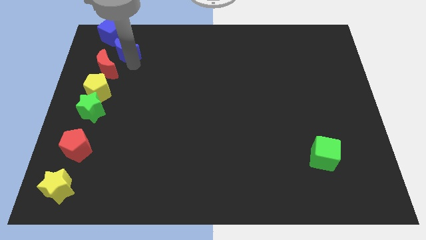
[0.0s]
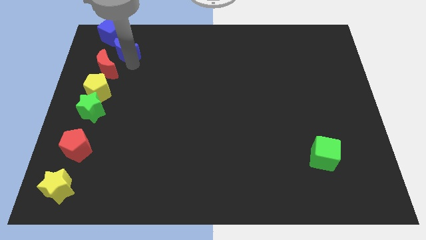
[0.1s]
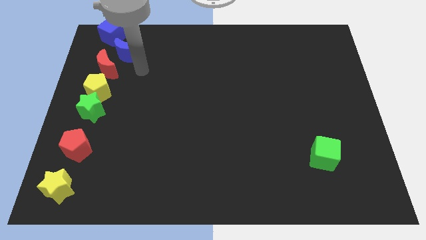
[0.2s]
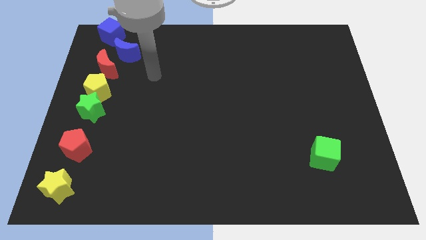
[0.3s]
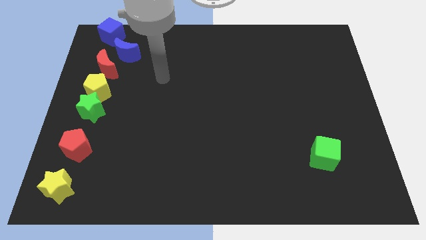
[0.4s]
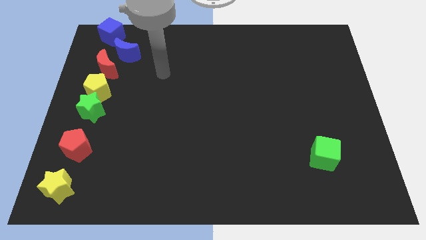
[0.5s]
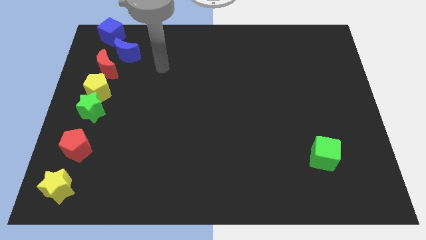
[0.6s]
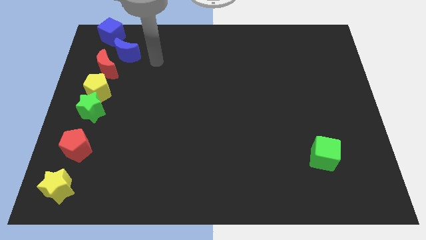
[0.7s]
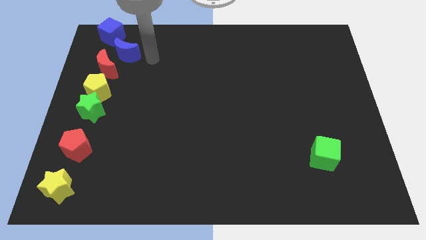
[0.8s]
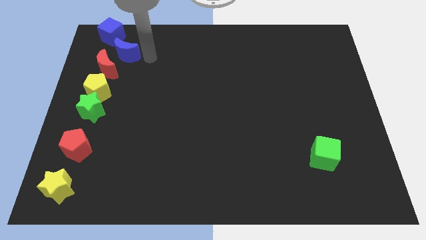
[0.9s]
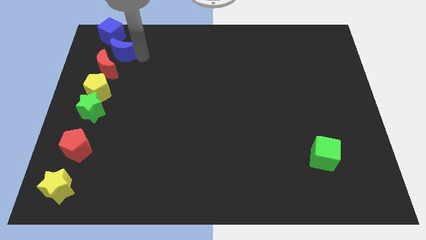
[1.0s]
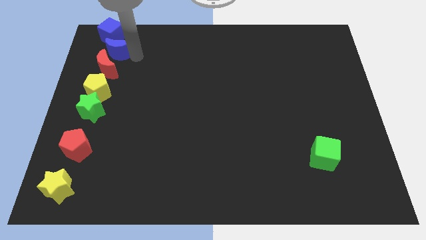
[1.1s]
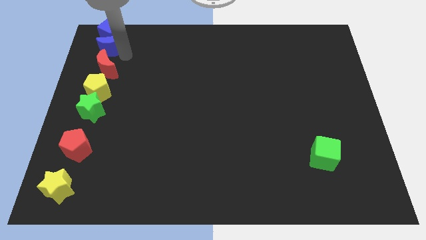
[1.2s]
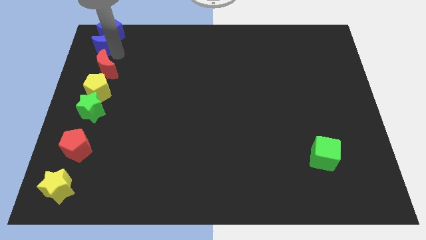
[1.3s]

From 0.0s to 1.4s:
put the blue moon above the red moon

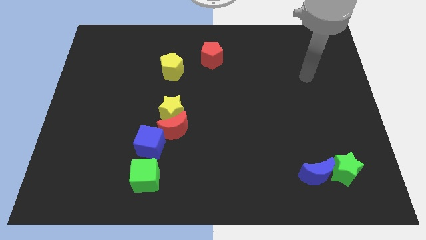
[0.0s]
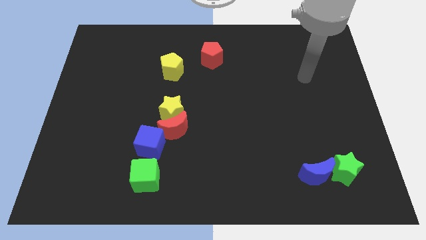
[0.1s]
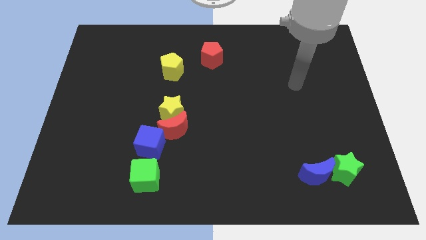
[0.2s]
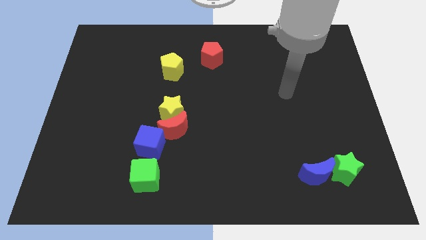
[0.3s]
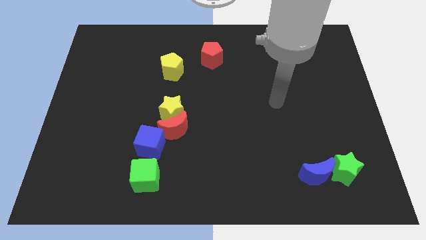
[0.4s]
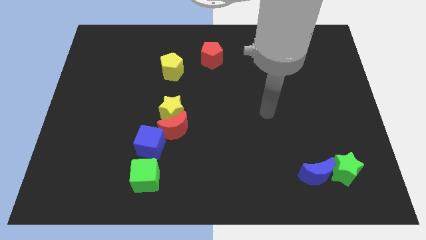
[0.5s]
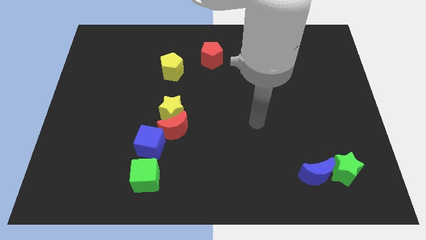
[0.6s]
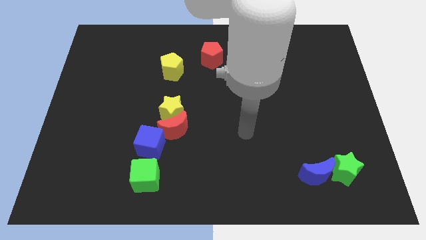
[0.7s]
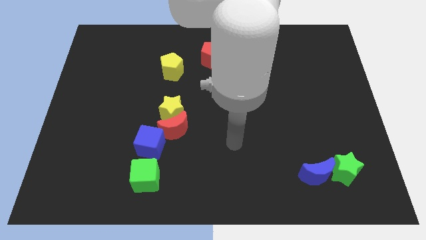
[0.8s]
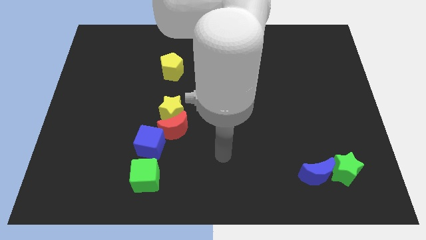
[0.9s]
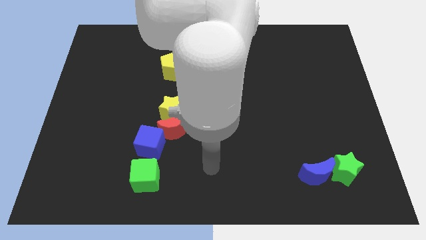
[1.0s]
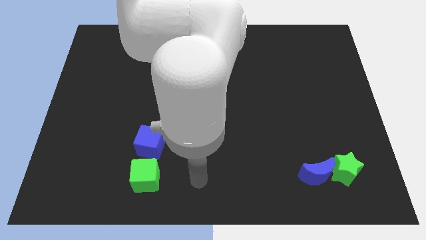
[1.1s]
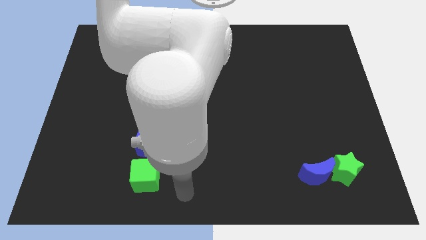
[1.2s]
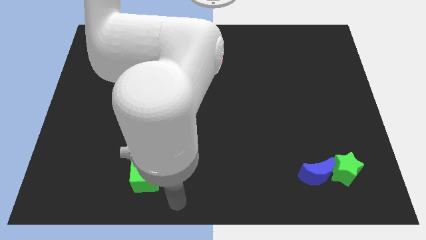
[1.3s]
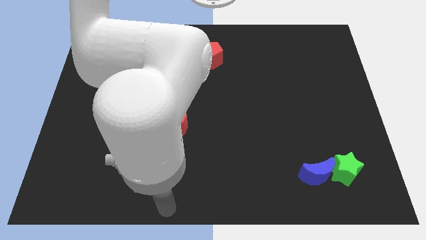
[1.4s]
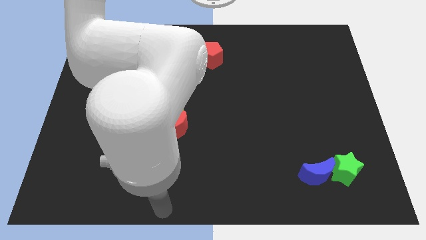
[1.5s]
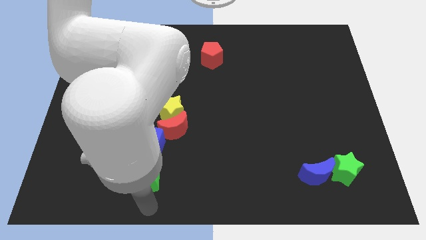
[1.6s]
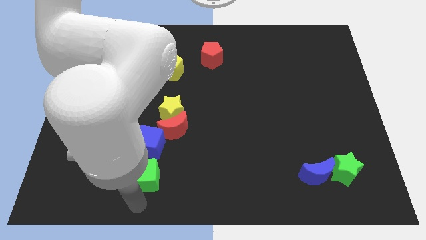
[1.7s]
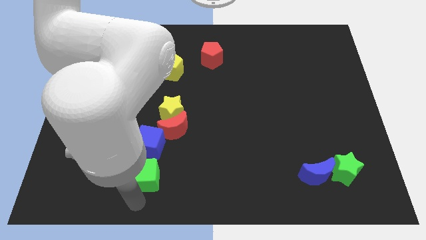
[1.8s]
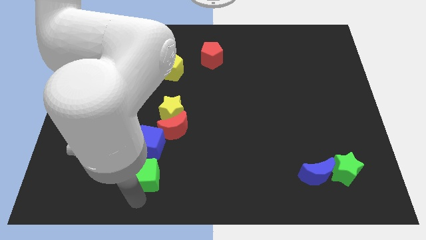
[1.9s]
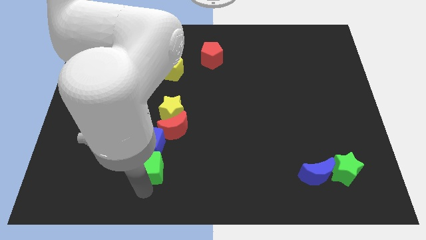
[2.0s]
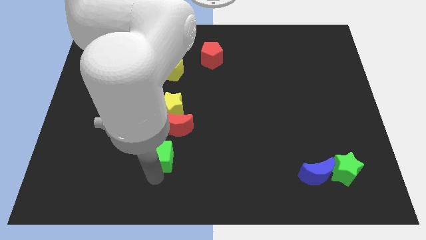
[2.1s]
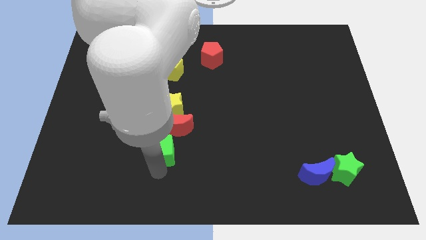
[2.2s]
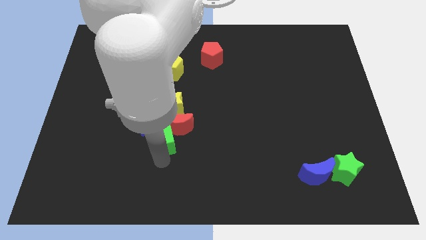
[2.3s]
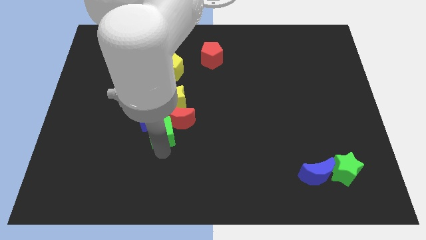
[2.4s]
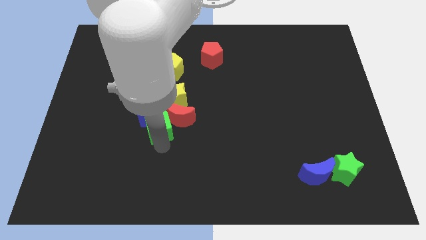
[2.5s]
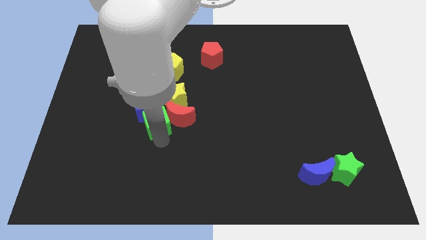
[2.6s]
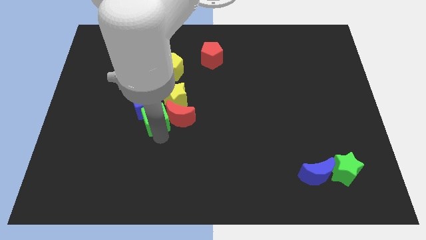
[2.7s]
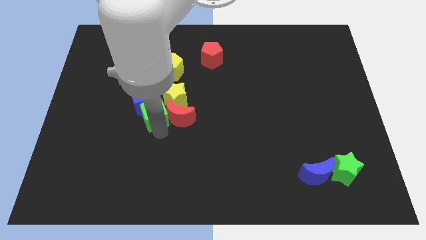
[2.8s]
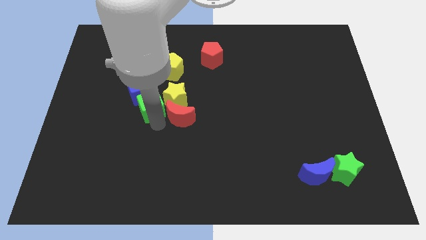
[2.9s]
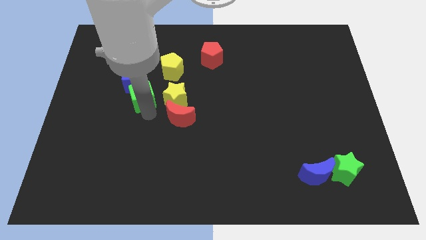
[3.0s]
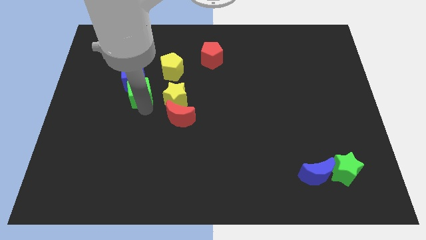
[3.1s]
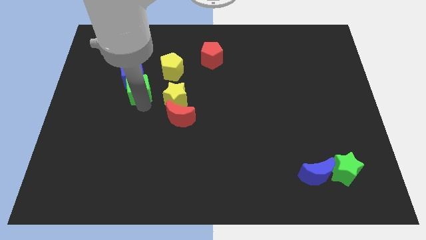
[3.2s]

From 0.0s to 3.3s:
place green cube to the left of yellow star

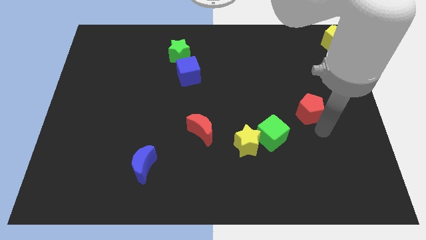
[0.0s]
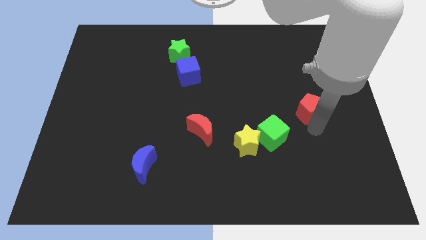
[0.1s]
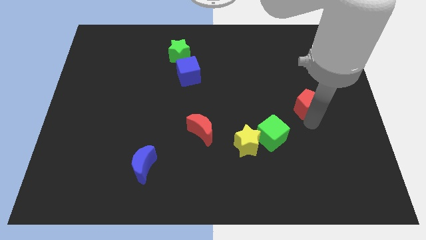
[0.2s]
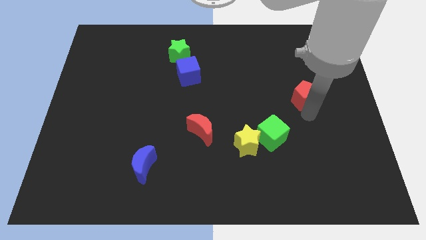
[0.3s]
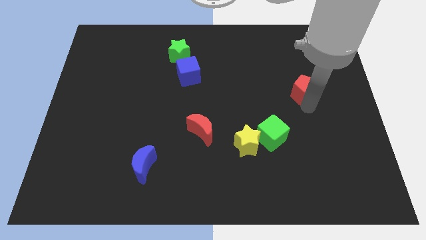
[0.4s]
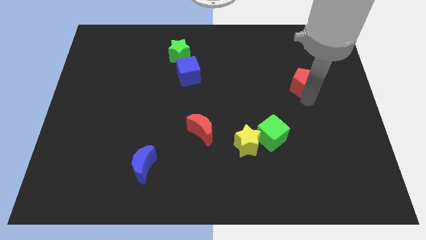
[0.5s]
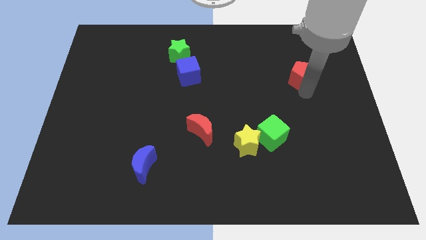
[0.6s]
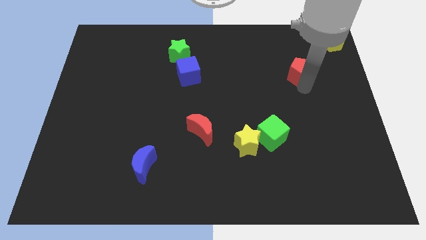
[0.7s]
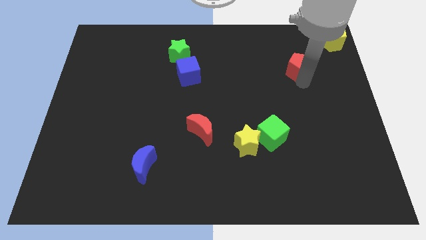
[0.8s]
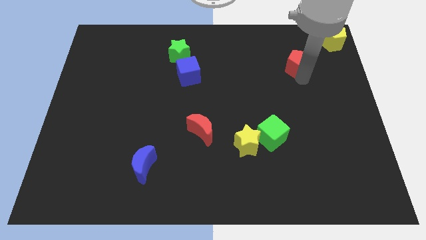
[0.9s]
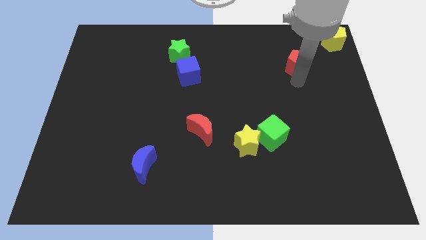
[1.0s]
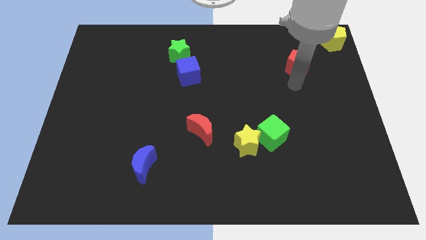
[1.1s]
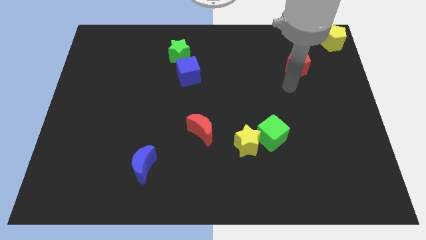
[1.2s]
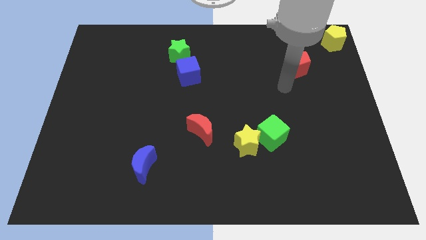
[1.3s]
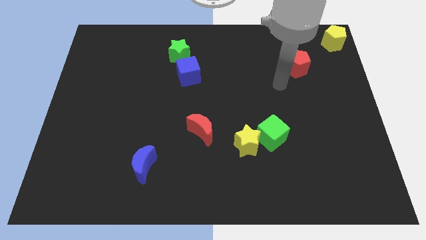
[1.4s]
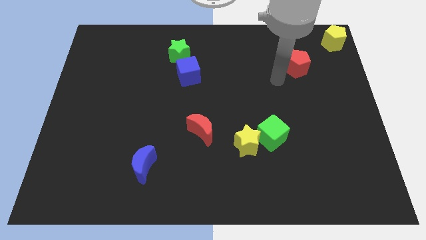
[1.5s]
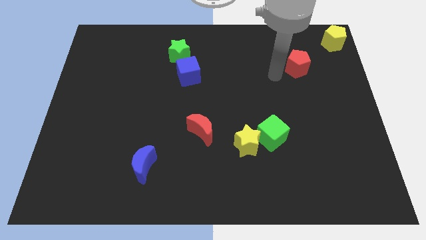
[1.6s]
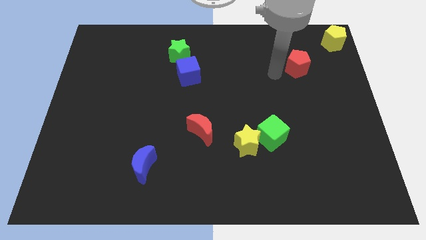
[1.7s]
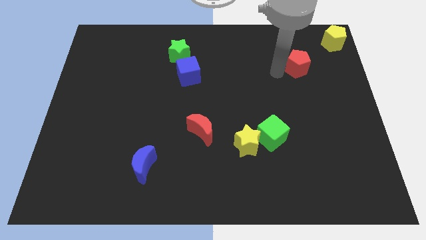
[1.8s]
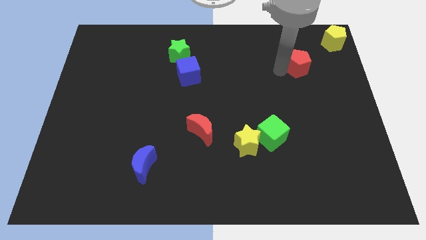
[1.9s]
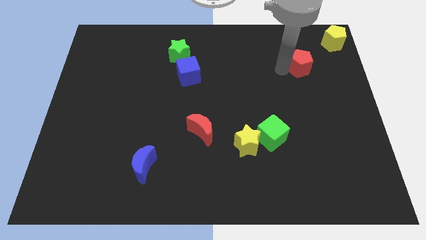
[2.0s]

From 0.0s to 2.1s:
push the red pentagon diagonal below yellow pentagon

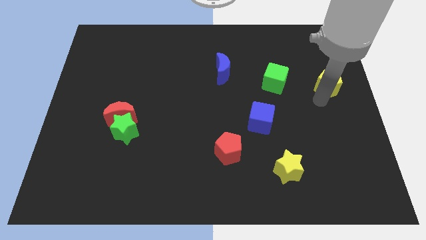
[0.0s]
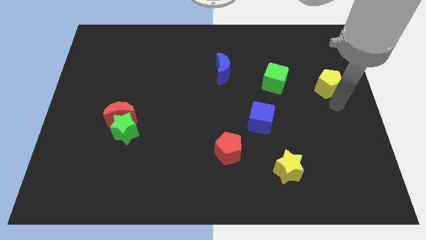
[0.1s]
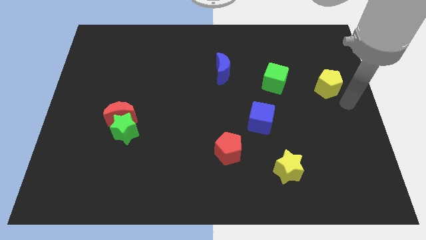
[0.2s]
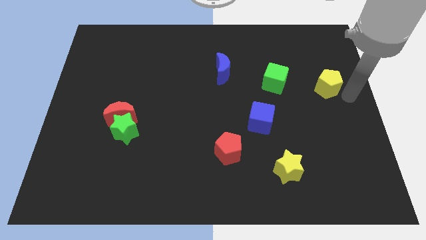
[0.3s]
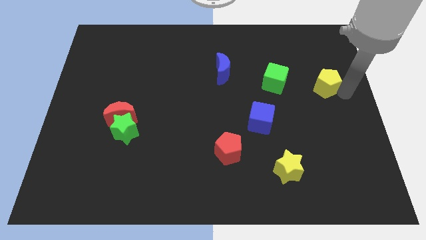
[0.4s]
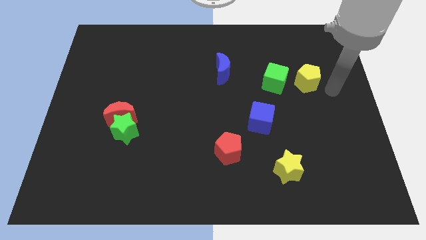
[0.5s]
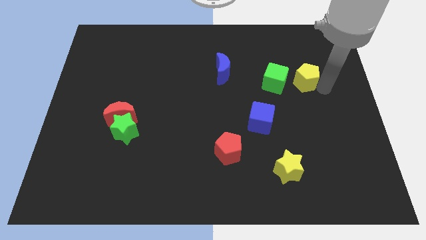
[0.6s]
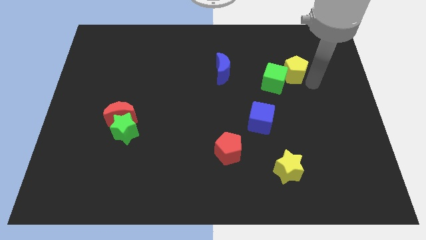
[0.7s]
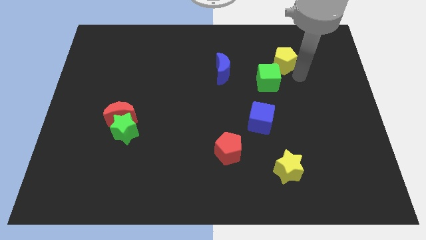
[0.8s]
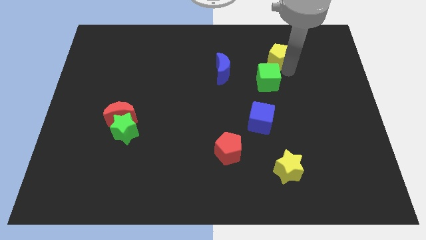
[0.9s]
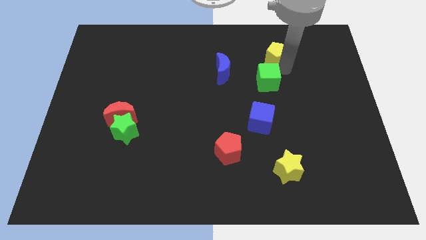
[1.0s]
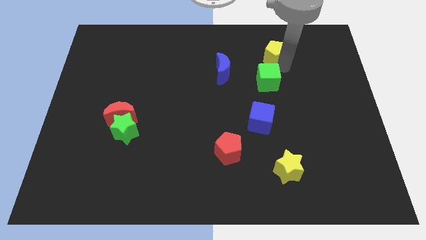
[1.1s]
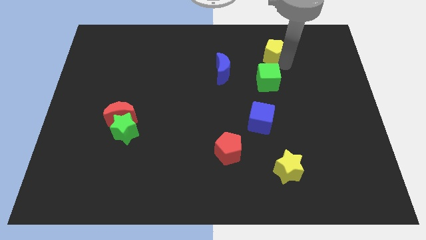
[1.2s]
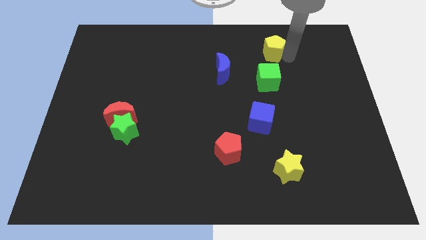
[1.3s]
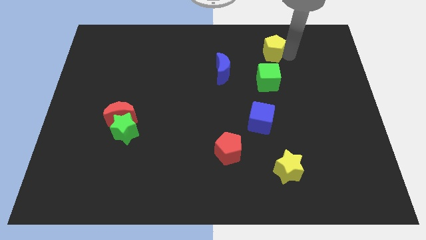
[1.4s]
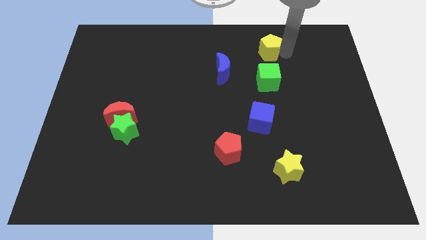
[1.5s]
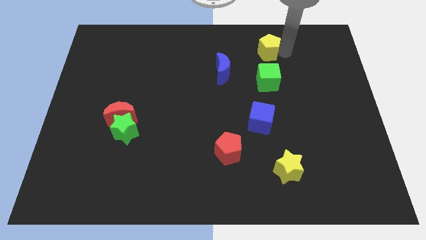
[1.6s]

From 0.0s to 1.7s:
move the yellow pentagon at the top of the green cube

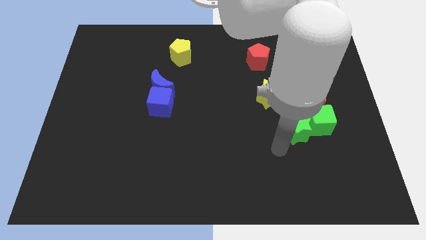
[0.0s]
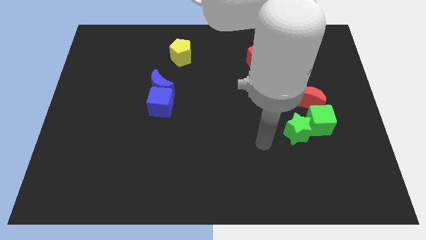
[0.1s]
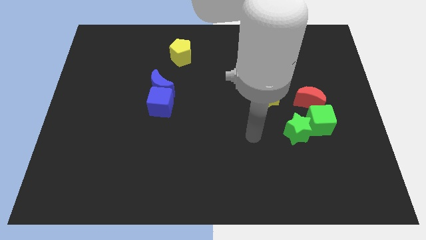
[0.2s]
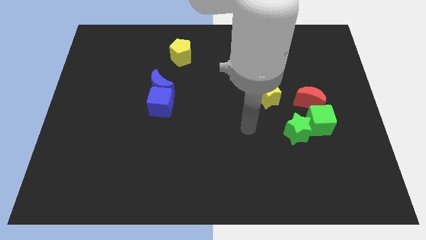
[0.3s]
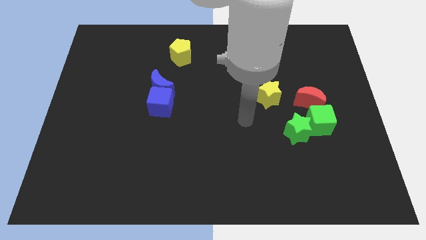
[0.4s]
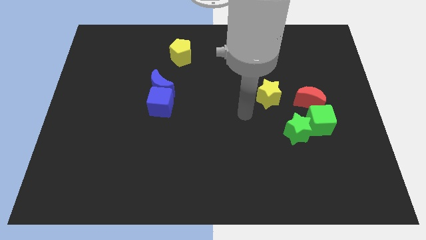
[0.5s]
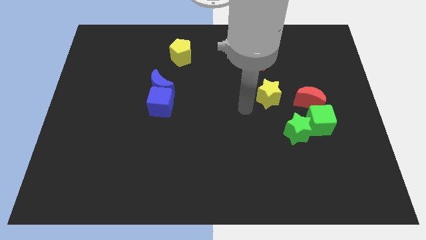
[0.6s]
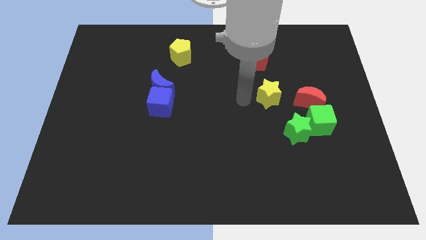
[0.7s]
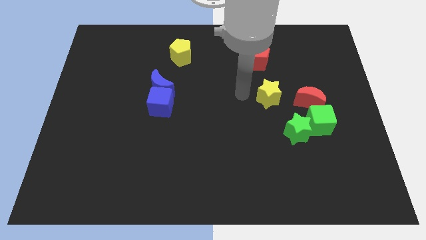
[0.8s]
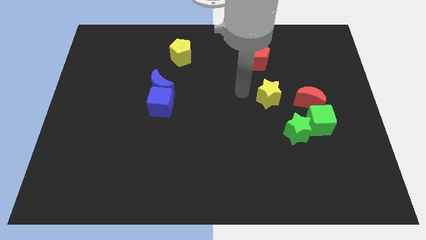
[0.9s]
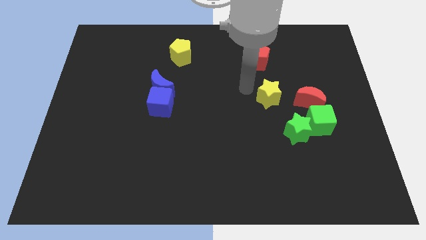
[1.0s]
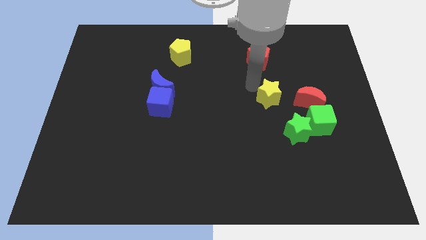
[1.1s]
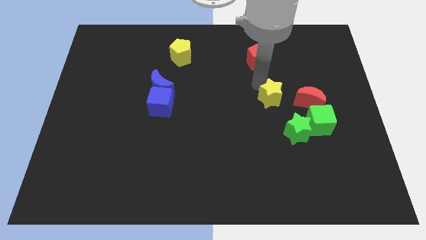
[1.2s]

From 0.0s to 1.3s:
move your arm towards the yellow star
